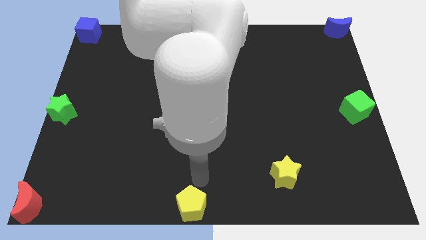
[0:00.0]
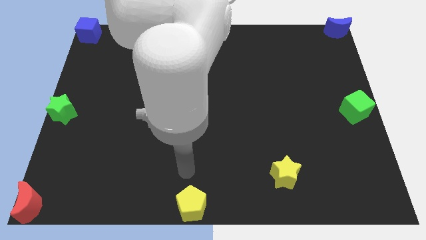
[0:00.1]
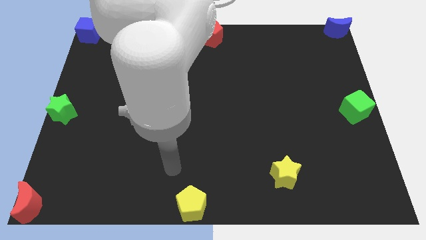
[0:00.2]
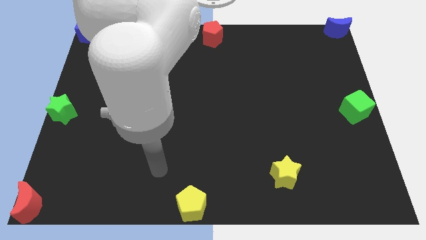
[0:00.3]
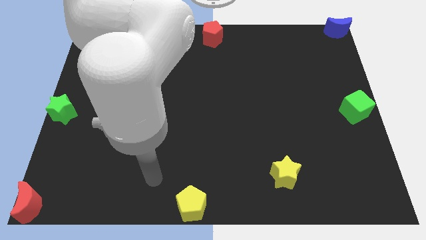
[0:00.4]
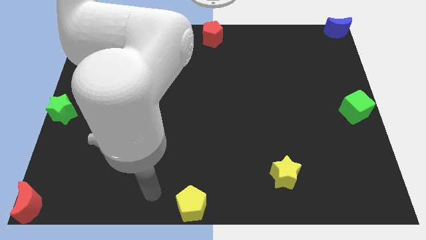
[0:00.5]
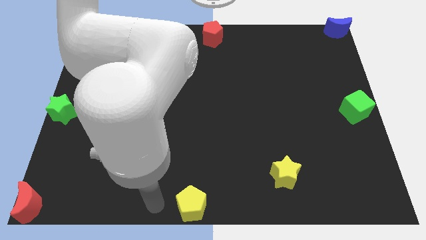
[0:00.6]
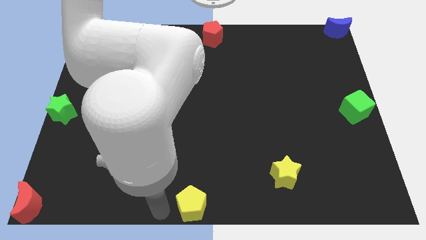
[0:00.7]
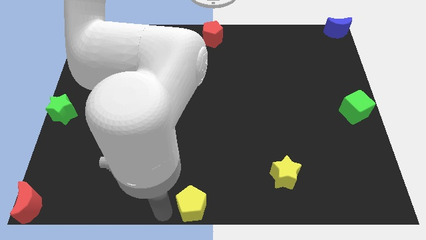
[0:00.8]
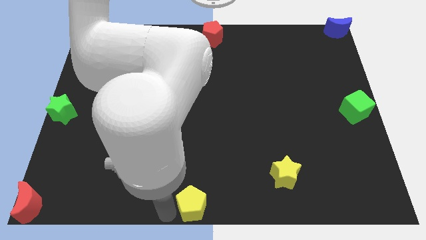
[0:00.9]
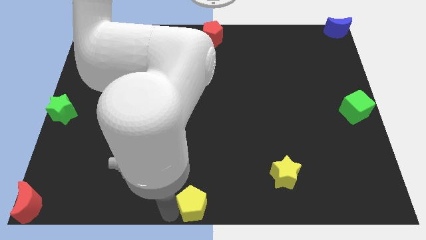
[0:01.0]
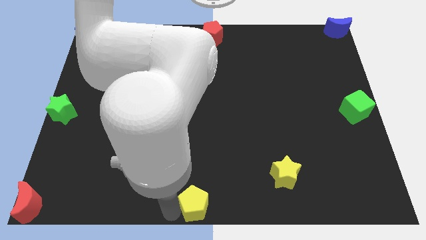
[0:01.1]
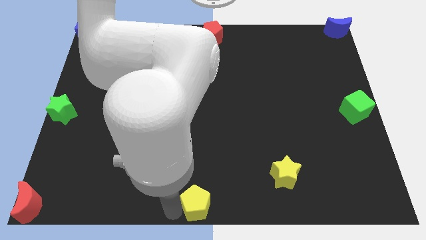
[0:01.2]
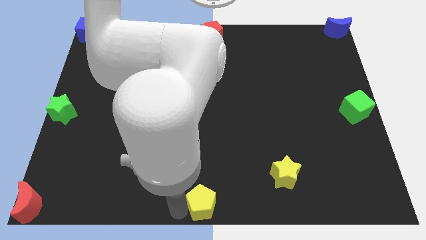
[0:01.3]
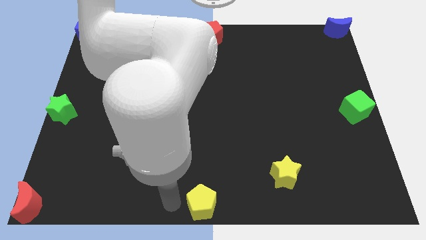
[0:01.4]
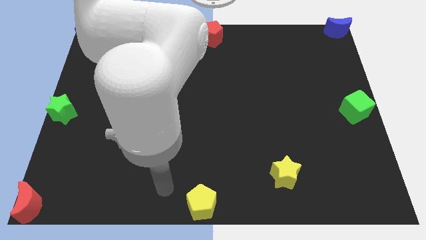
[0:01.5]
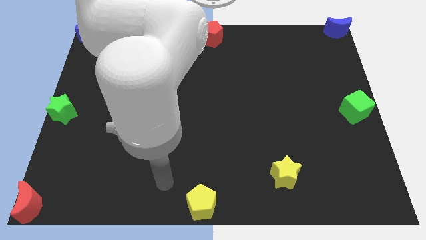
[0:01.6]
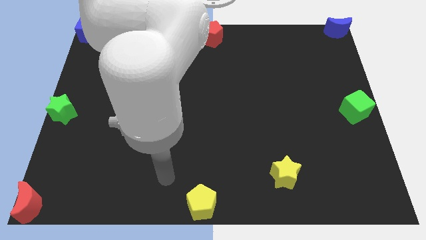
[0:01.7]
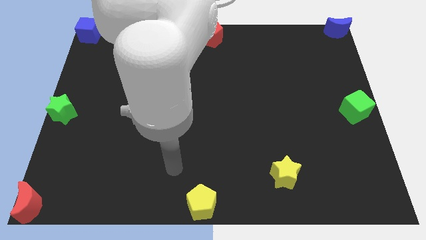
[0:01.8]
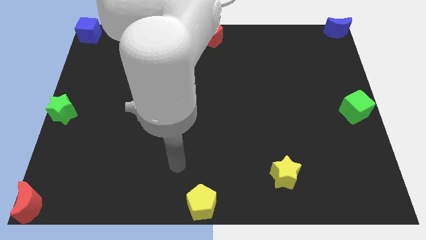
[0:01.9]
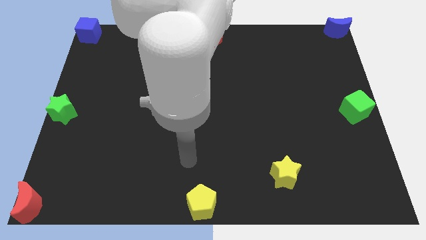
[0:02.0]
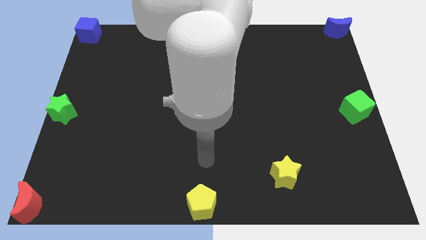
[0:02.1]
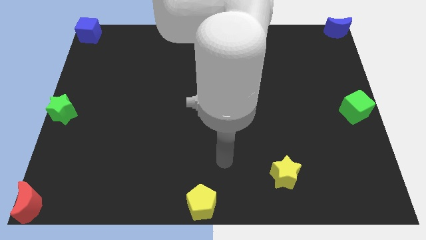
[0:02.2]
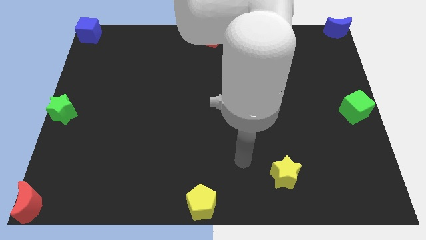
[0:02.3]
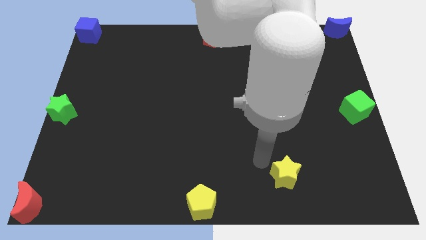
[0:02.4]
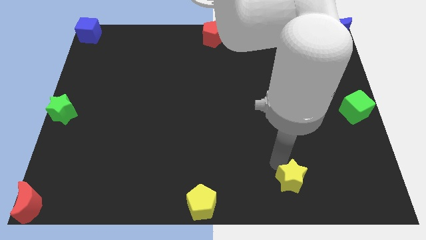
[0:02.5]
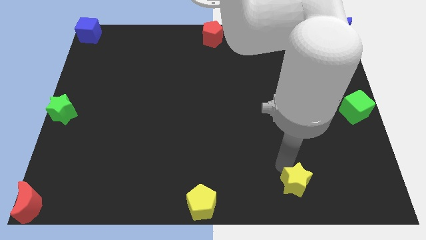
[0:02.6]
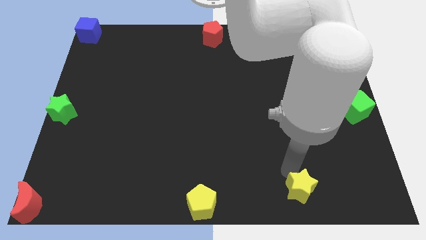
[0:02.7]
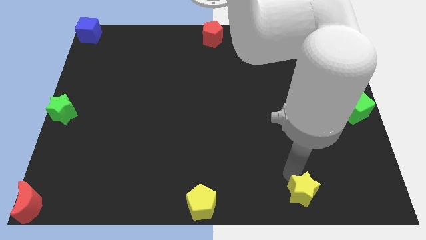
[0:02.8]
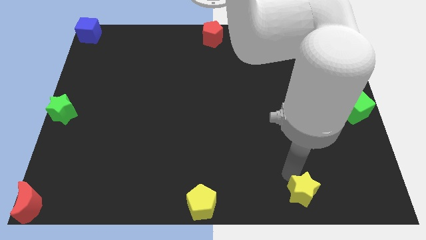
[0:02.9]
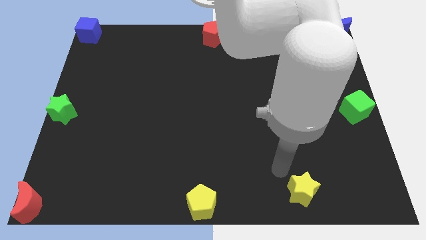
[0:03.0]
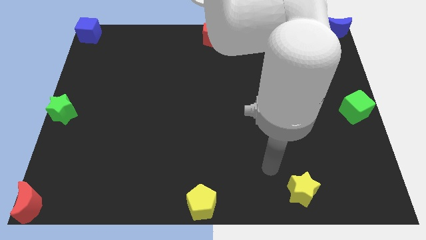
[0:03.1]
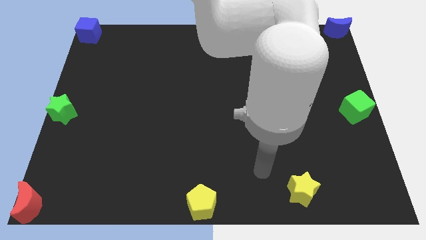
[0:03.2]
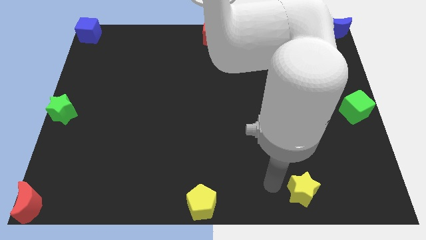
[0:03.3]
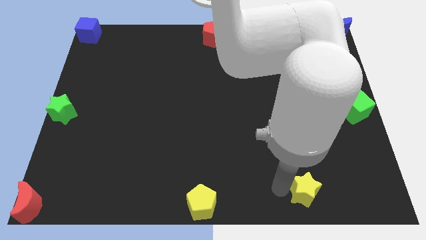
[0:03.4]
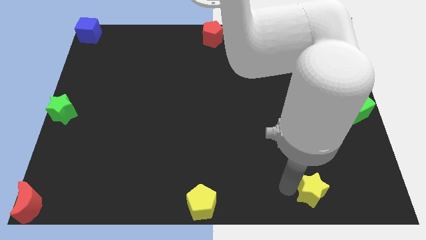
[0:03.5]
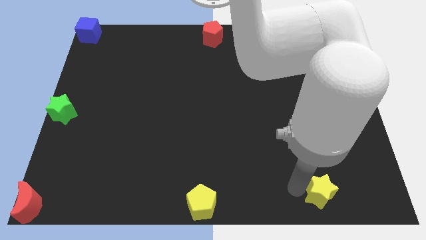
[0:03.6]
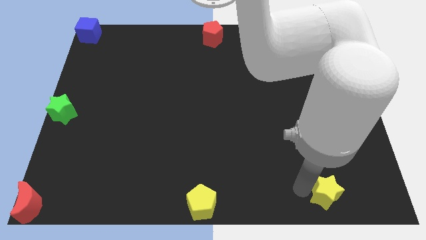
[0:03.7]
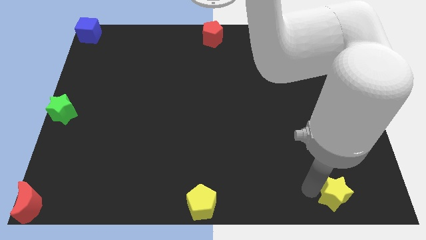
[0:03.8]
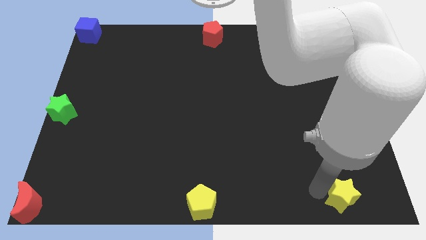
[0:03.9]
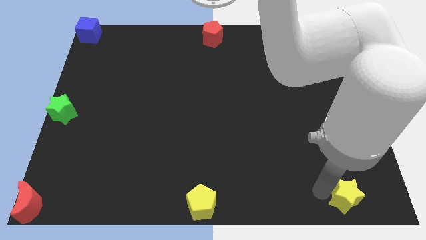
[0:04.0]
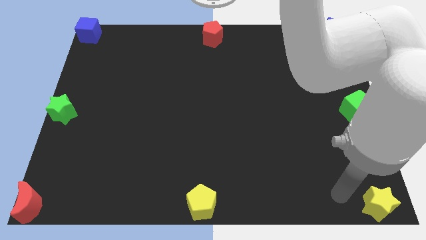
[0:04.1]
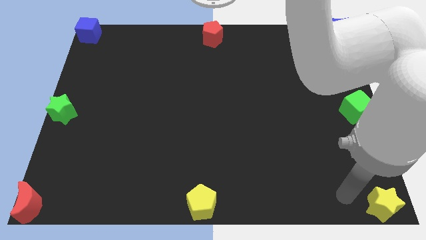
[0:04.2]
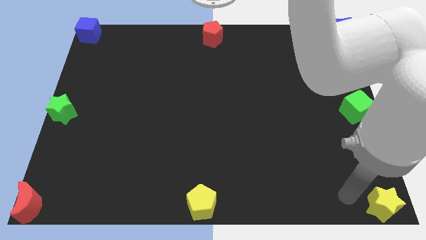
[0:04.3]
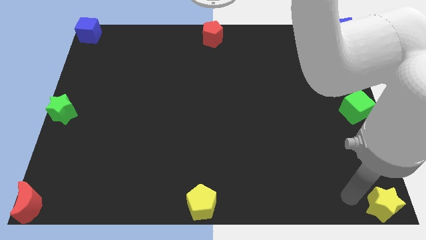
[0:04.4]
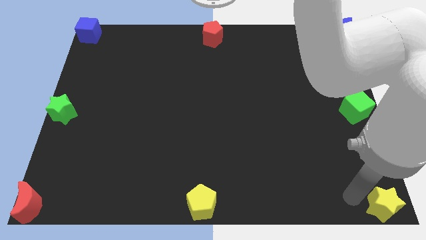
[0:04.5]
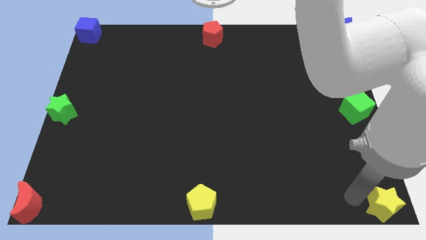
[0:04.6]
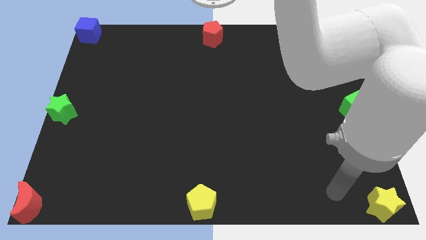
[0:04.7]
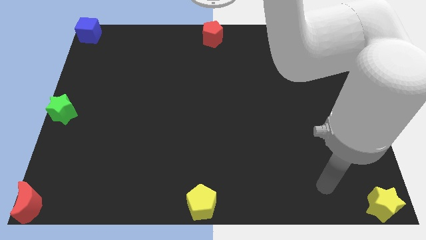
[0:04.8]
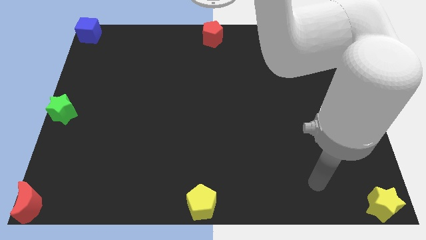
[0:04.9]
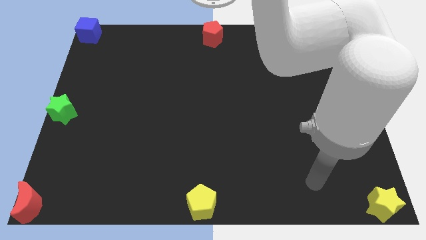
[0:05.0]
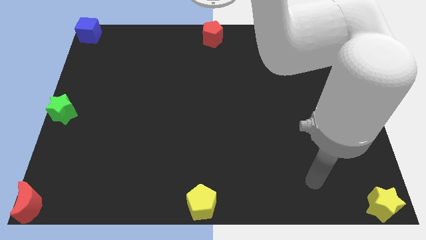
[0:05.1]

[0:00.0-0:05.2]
push the yellow star bottom to the right corner of the board

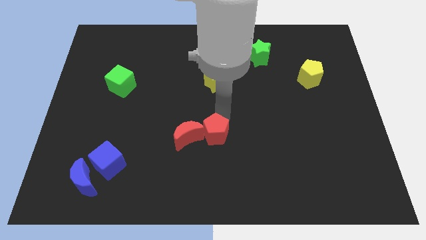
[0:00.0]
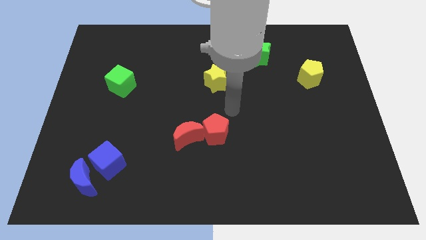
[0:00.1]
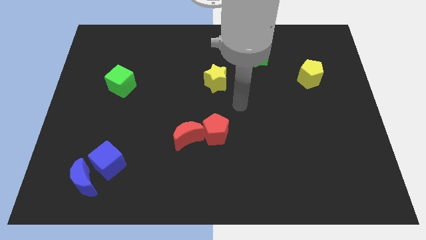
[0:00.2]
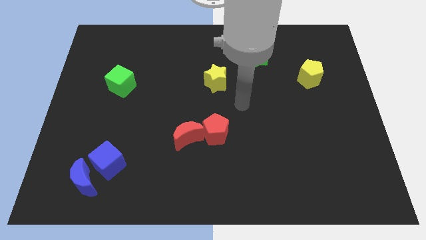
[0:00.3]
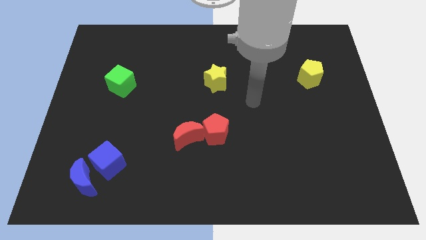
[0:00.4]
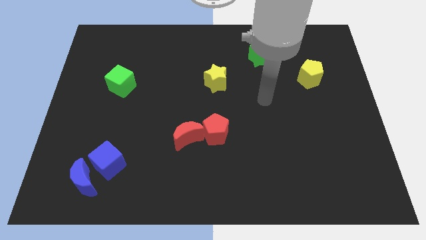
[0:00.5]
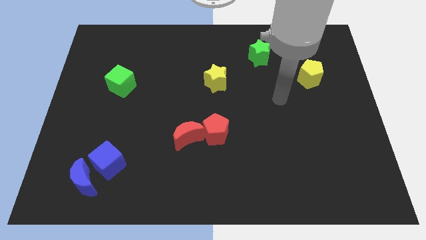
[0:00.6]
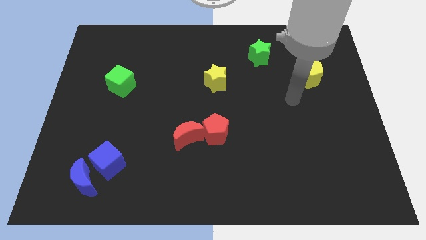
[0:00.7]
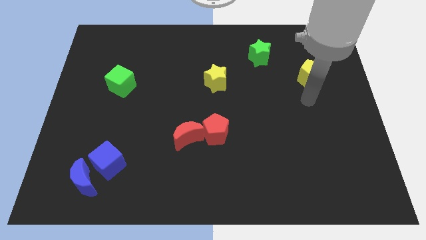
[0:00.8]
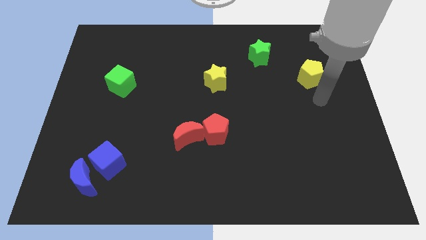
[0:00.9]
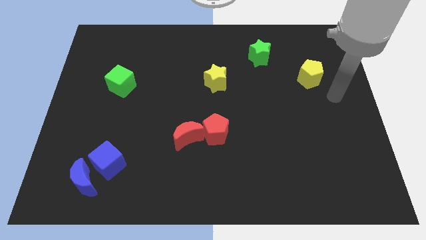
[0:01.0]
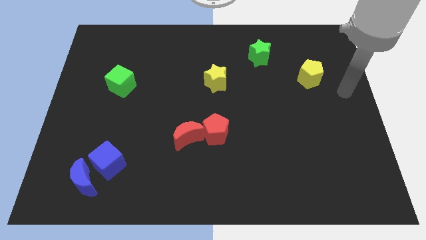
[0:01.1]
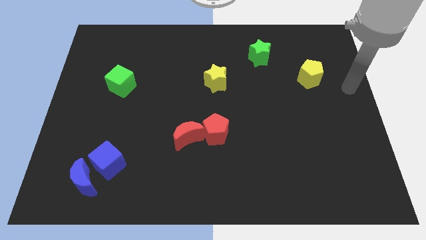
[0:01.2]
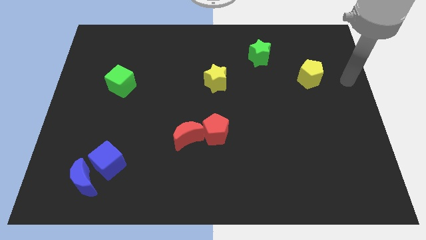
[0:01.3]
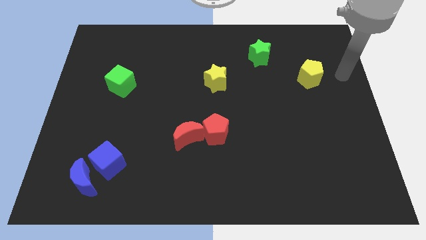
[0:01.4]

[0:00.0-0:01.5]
push your hand at the right side of the yellow pentagon

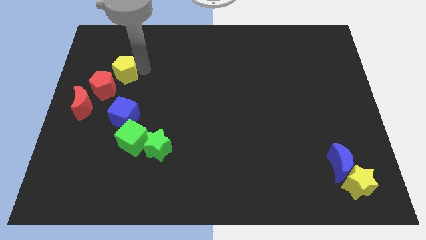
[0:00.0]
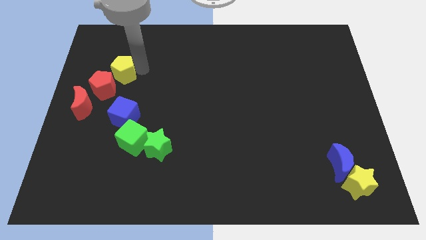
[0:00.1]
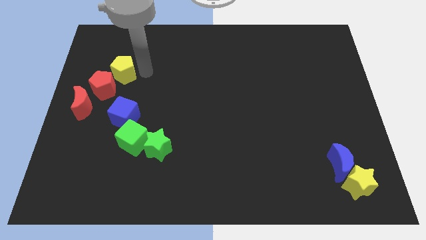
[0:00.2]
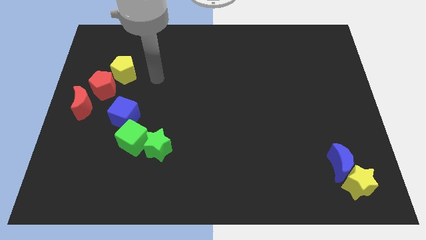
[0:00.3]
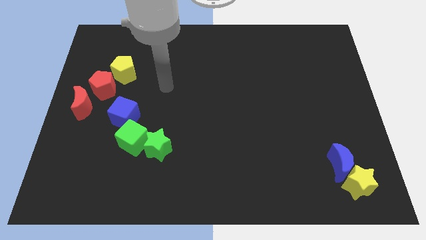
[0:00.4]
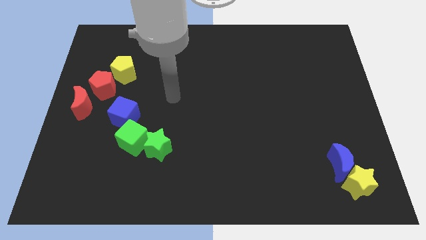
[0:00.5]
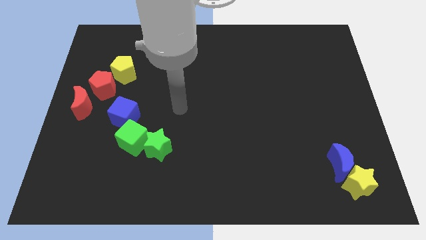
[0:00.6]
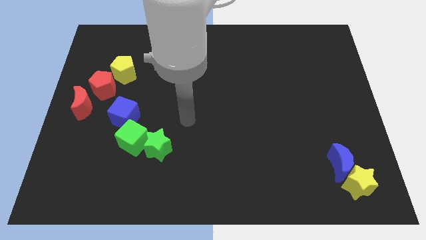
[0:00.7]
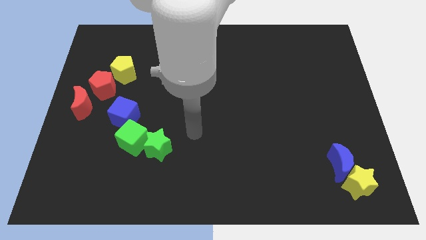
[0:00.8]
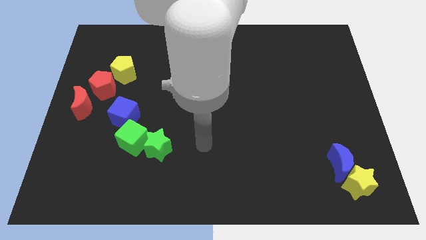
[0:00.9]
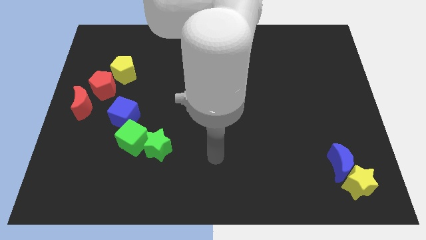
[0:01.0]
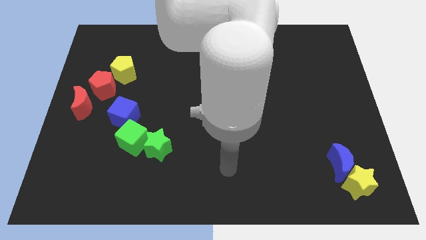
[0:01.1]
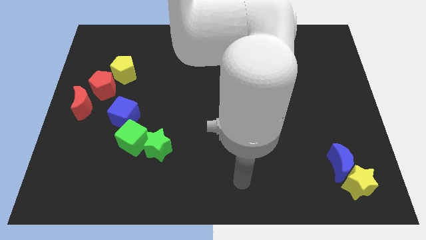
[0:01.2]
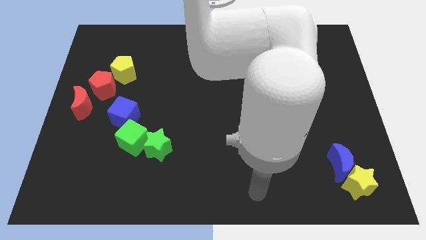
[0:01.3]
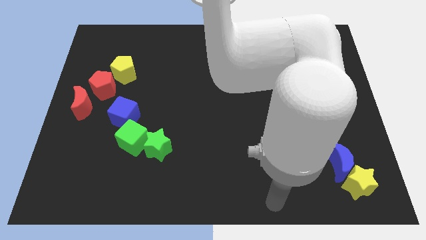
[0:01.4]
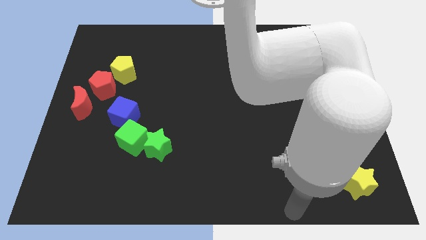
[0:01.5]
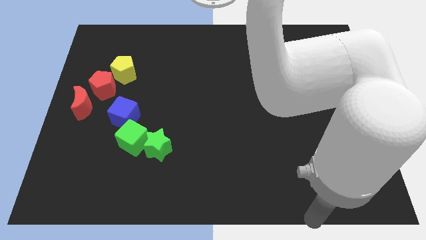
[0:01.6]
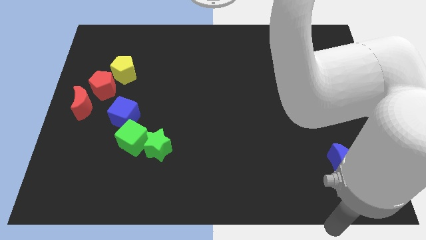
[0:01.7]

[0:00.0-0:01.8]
go away from the yellow pentagon

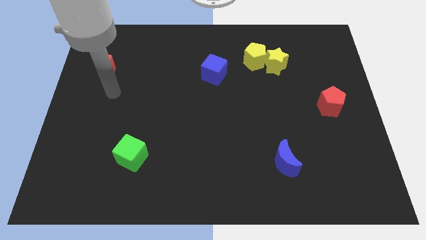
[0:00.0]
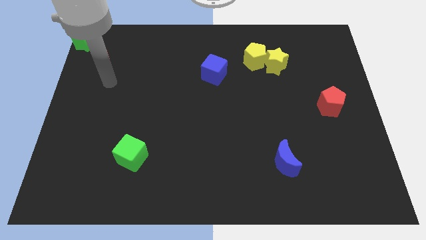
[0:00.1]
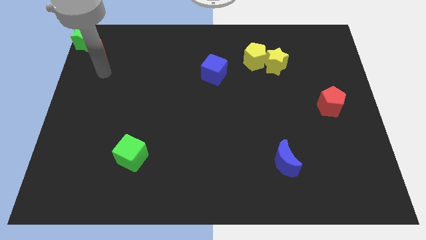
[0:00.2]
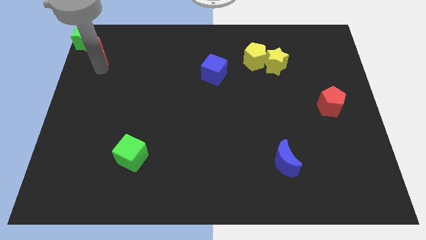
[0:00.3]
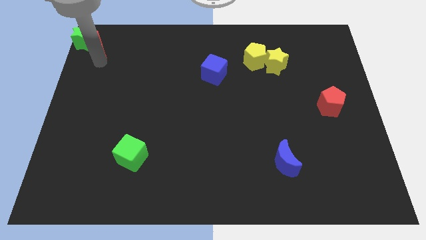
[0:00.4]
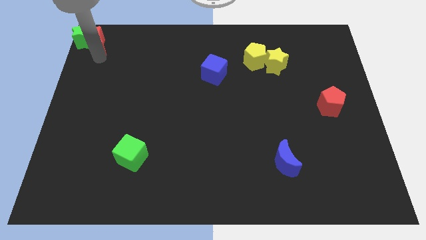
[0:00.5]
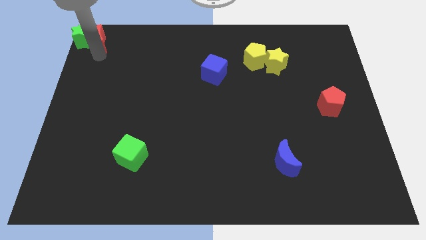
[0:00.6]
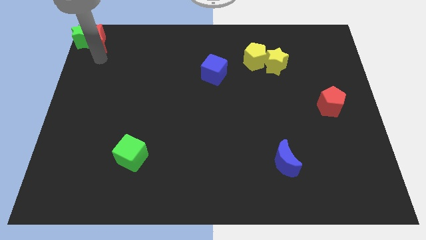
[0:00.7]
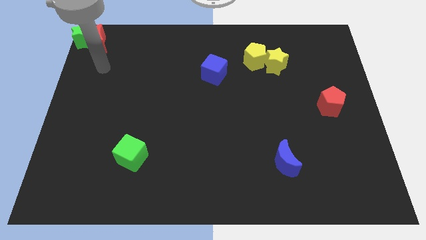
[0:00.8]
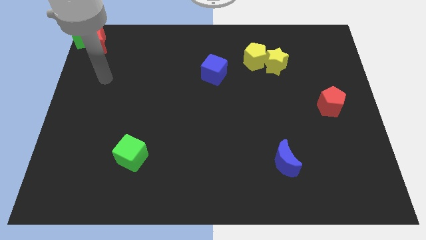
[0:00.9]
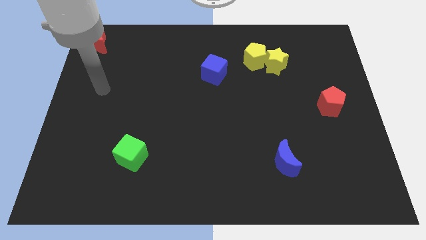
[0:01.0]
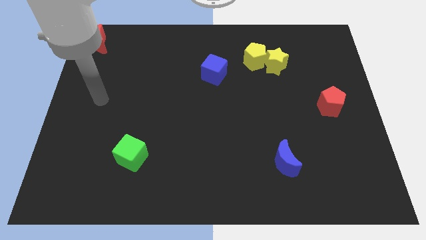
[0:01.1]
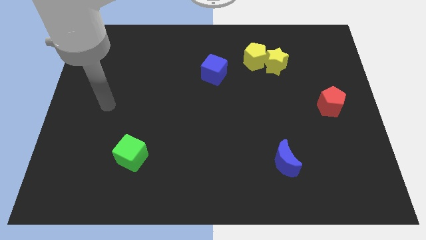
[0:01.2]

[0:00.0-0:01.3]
put the red moon into the green star
